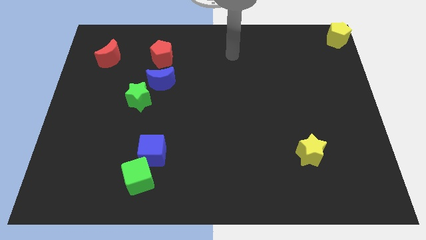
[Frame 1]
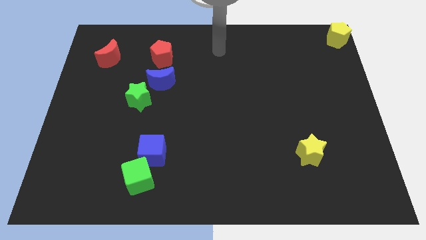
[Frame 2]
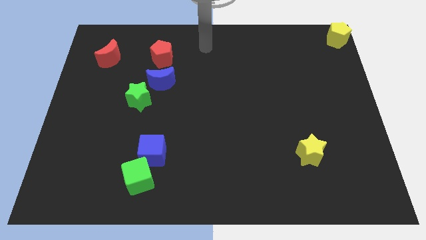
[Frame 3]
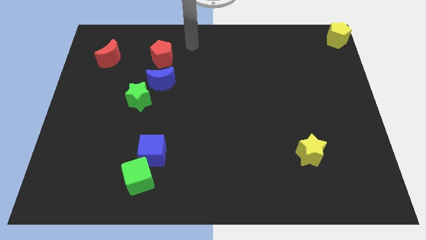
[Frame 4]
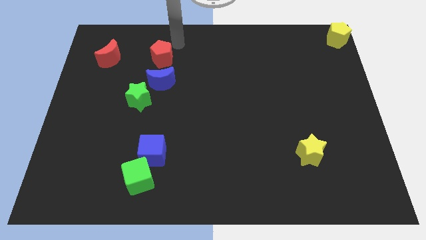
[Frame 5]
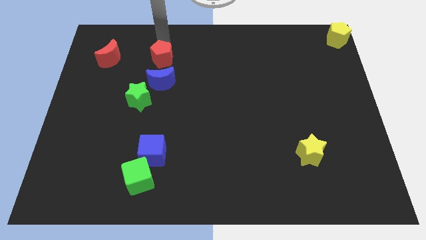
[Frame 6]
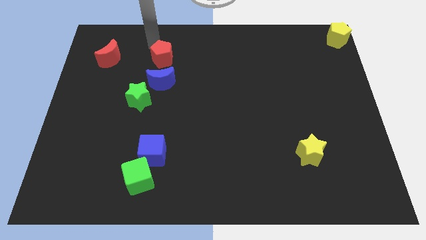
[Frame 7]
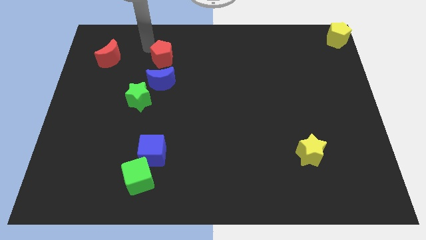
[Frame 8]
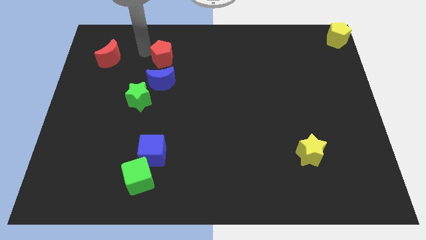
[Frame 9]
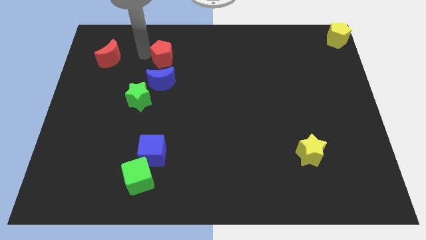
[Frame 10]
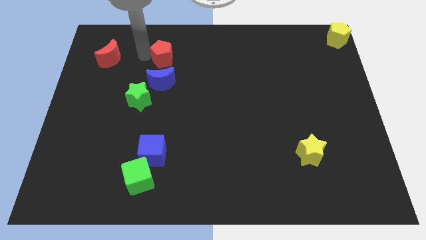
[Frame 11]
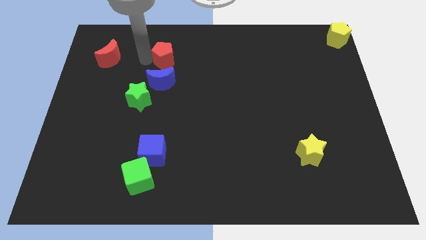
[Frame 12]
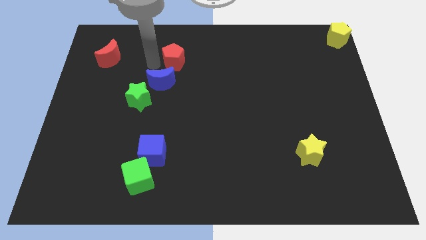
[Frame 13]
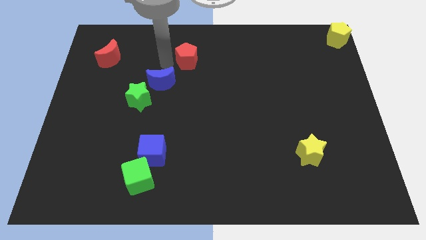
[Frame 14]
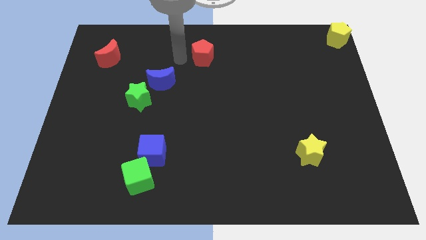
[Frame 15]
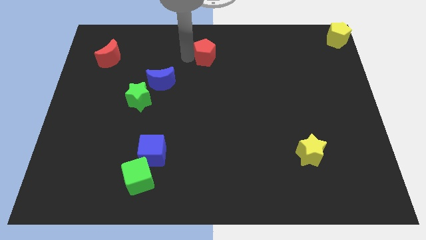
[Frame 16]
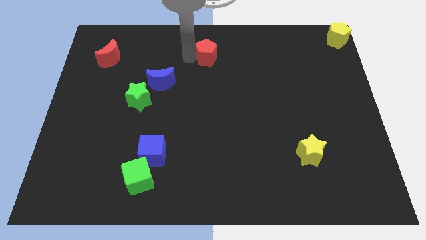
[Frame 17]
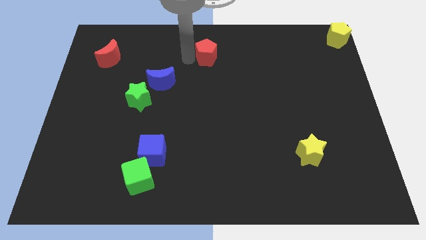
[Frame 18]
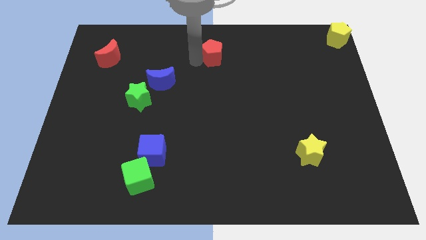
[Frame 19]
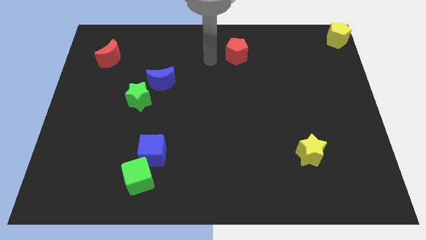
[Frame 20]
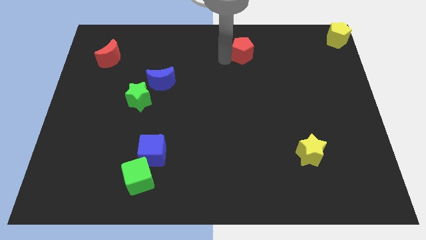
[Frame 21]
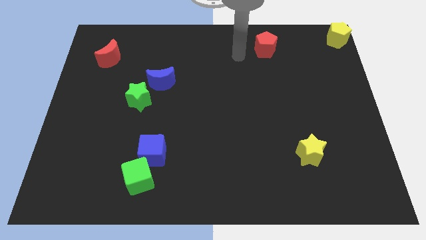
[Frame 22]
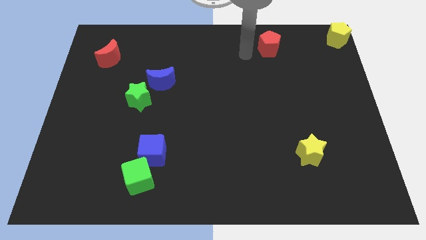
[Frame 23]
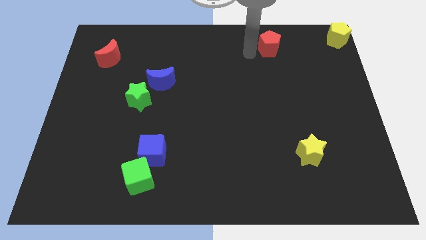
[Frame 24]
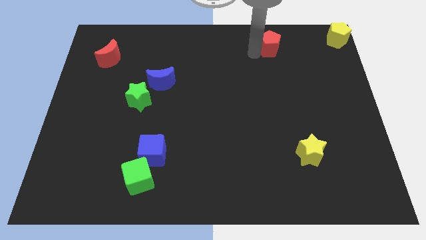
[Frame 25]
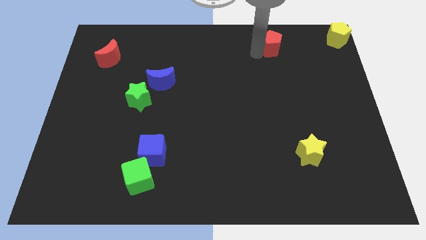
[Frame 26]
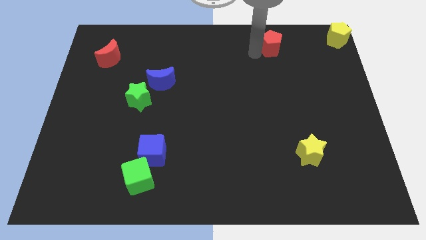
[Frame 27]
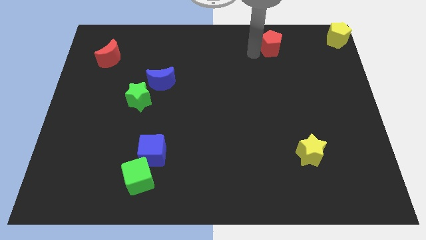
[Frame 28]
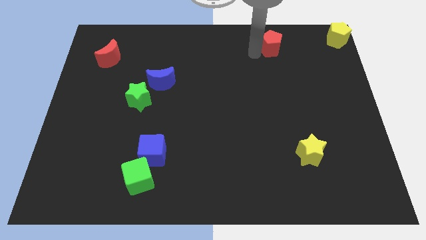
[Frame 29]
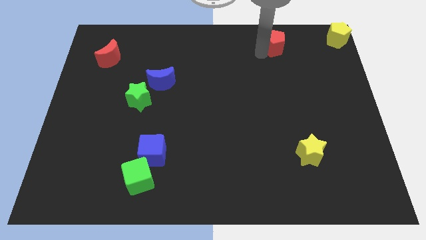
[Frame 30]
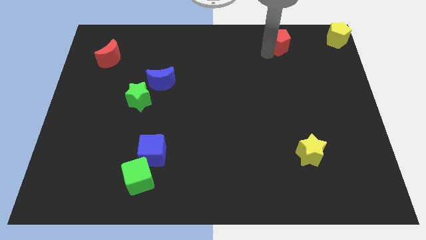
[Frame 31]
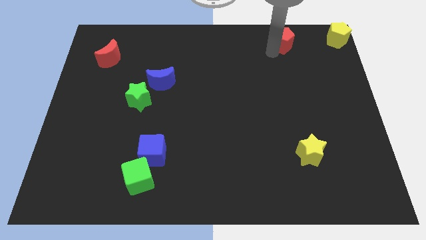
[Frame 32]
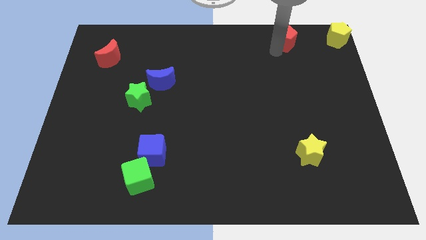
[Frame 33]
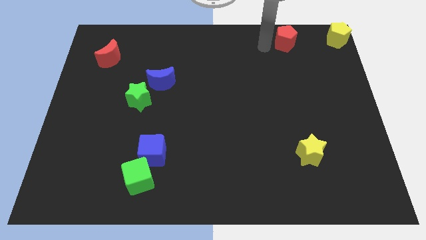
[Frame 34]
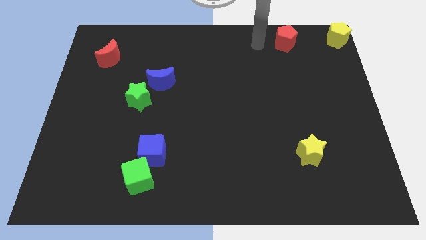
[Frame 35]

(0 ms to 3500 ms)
move the red pentagon away from the top of the blue moon

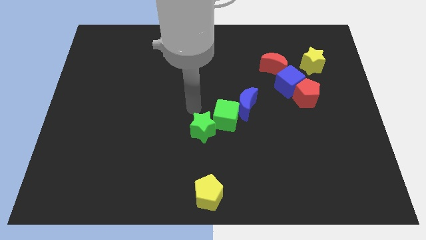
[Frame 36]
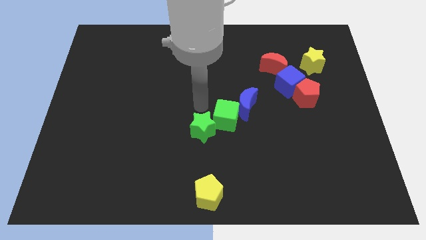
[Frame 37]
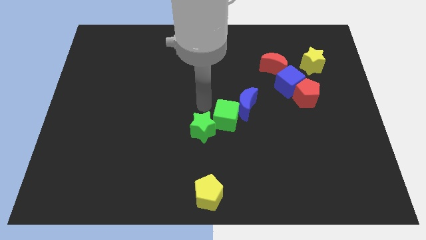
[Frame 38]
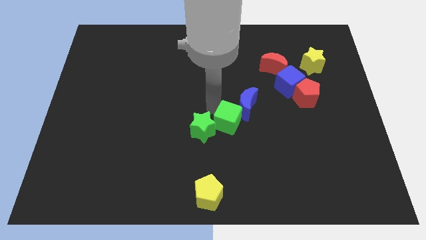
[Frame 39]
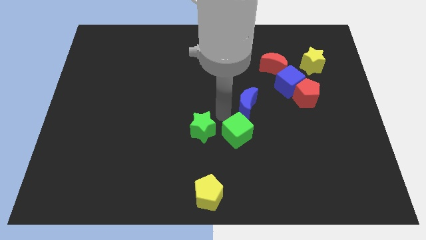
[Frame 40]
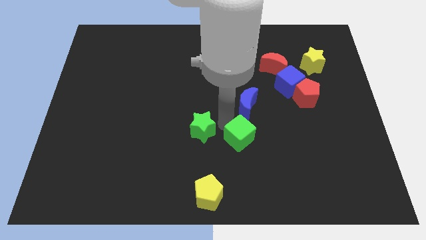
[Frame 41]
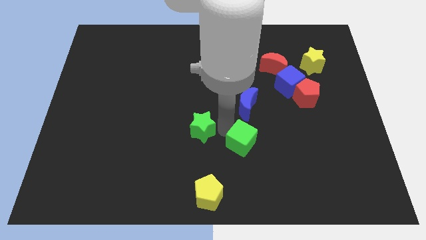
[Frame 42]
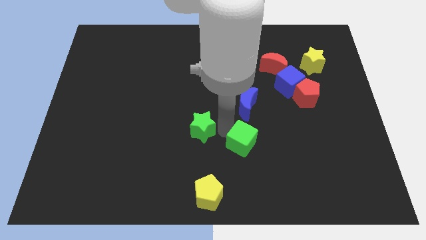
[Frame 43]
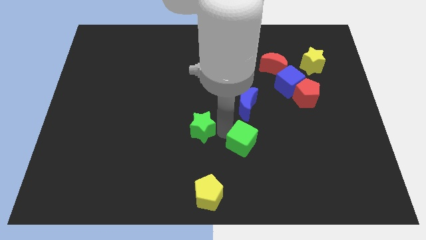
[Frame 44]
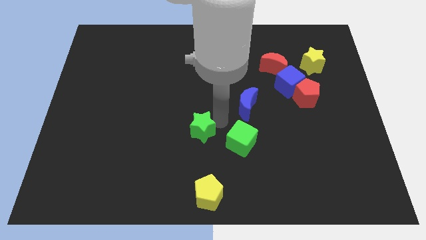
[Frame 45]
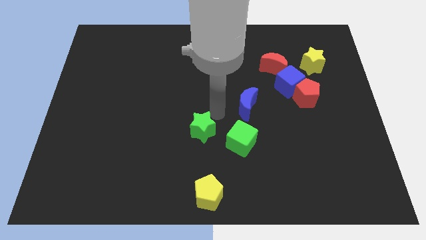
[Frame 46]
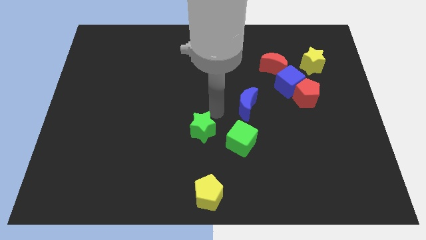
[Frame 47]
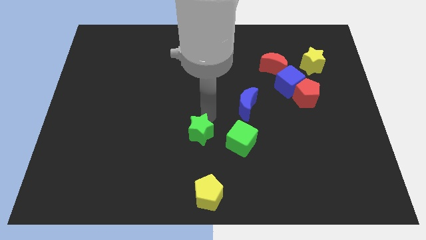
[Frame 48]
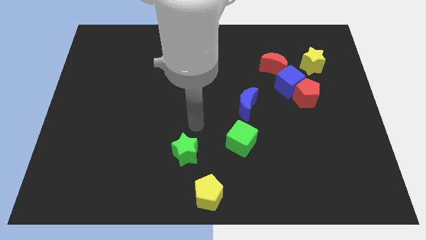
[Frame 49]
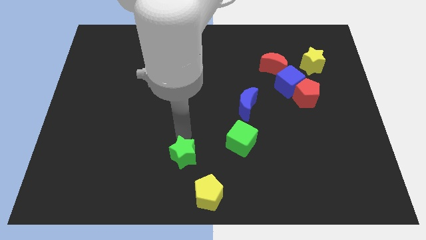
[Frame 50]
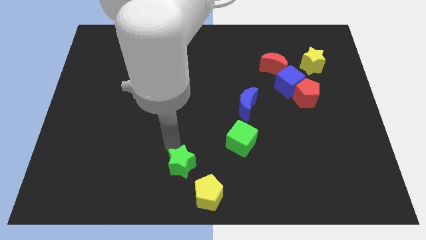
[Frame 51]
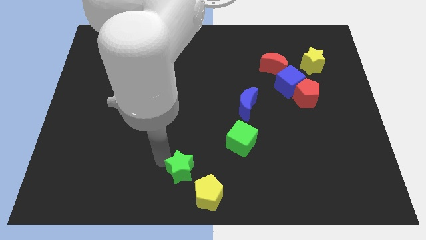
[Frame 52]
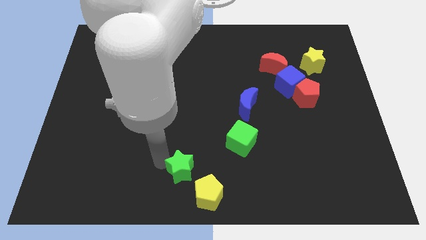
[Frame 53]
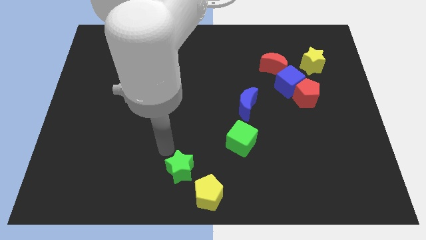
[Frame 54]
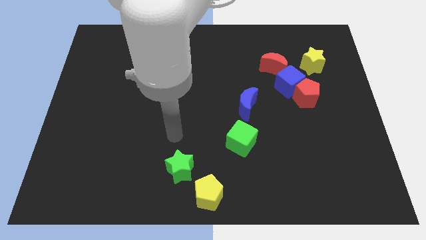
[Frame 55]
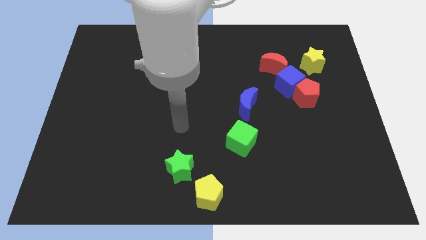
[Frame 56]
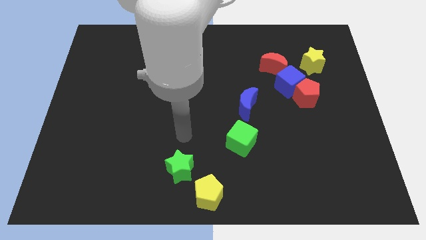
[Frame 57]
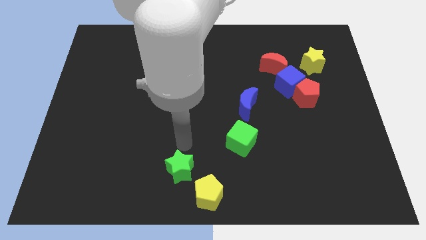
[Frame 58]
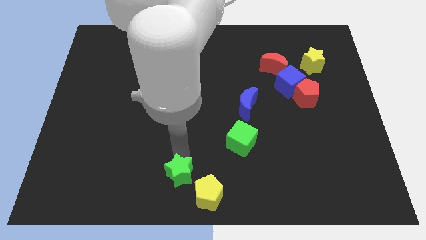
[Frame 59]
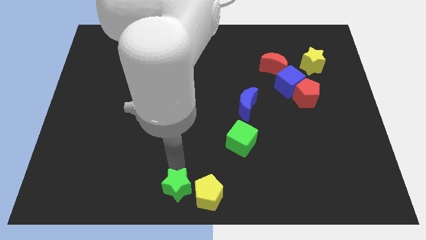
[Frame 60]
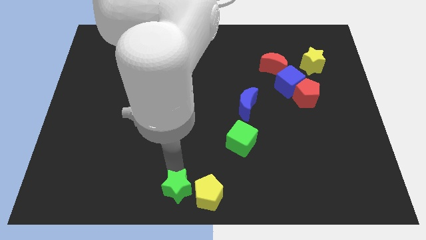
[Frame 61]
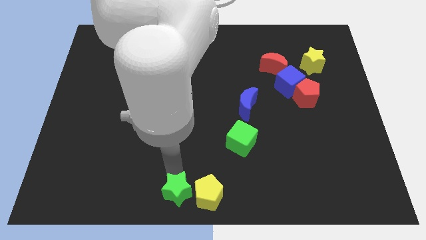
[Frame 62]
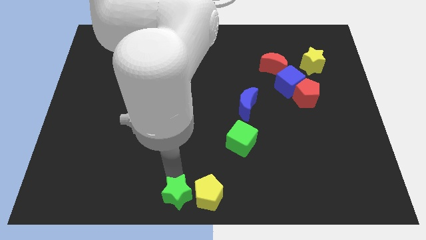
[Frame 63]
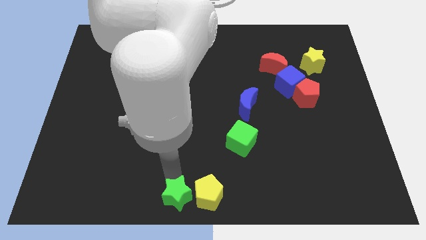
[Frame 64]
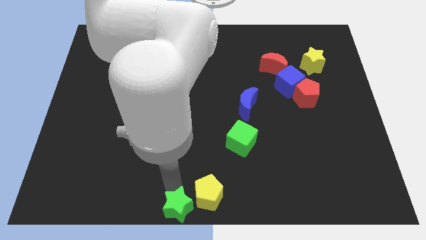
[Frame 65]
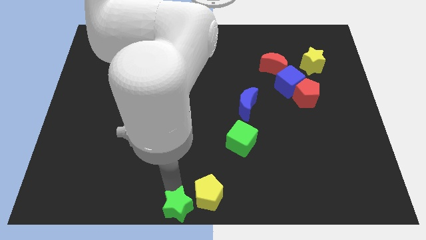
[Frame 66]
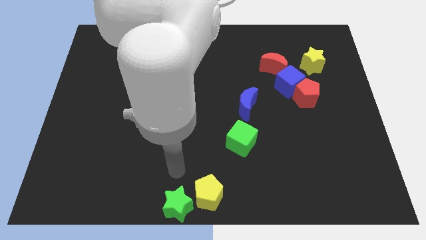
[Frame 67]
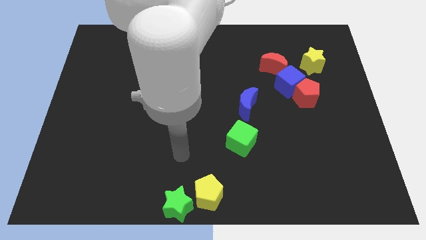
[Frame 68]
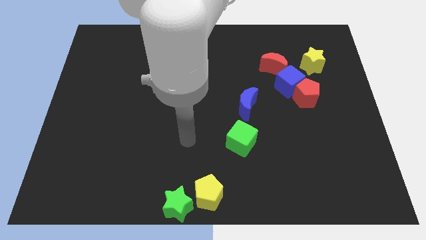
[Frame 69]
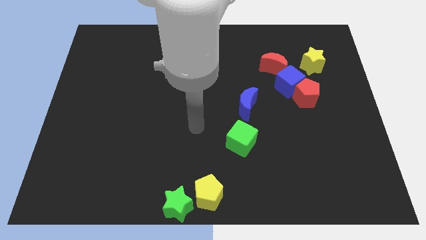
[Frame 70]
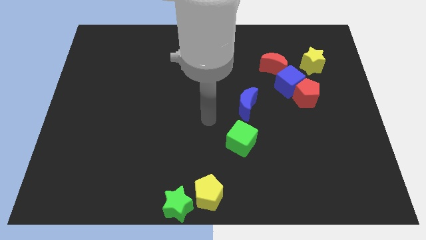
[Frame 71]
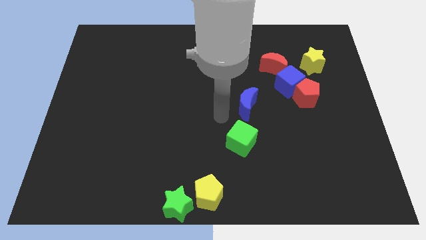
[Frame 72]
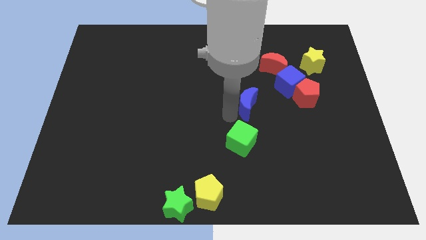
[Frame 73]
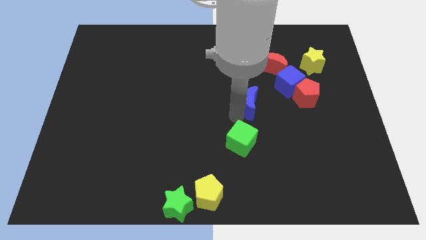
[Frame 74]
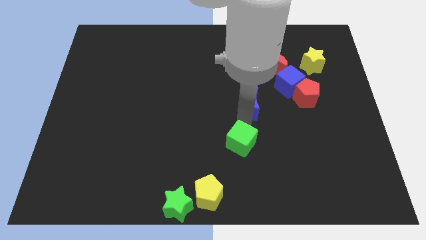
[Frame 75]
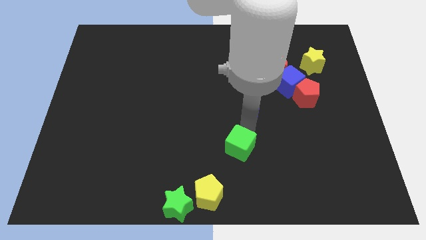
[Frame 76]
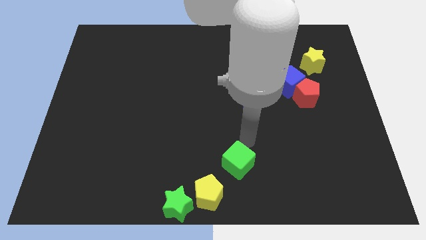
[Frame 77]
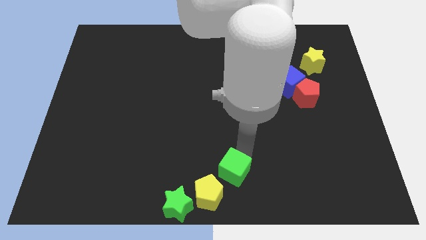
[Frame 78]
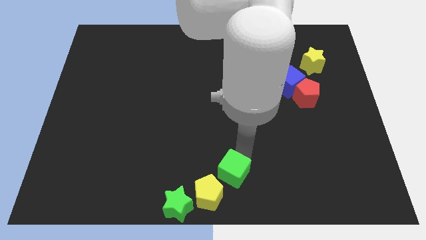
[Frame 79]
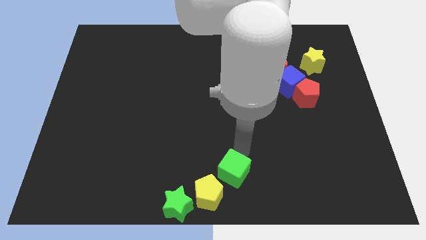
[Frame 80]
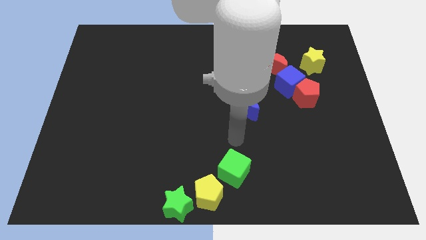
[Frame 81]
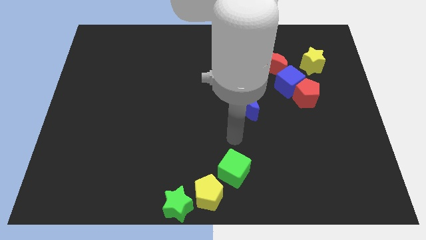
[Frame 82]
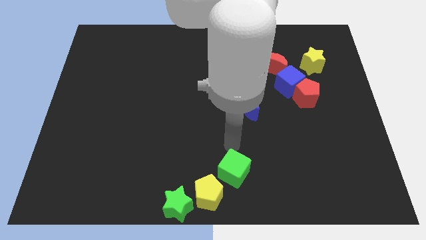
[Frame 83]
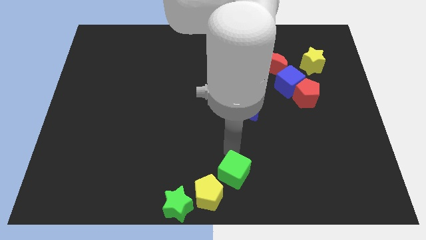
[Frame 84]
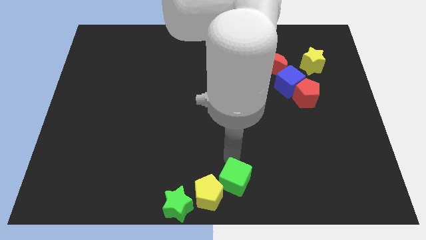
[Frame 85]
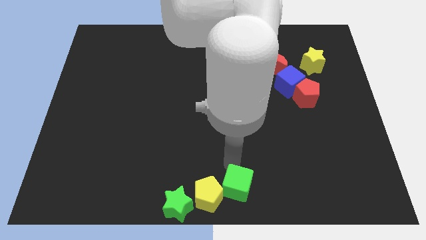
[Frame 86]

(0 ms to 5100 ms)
move the green cube green star into the yellow pentagon

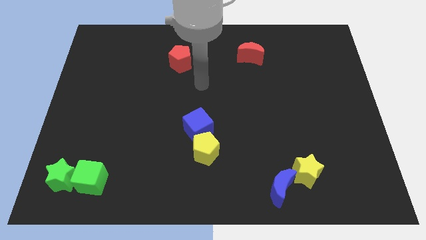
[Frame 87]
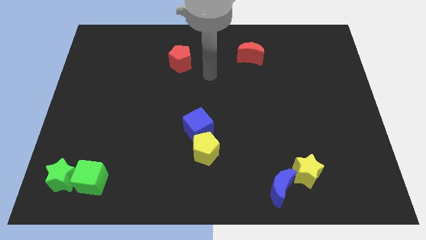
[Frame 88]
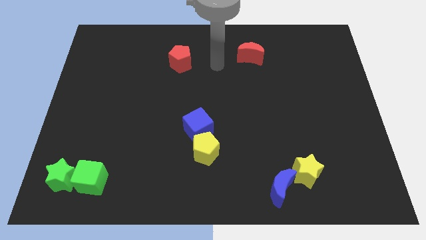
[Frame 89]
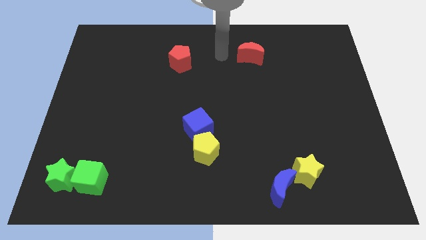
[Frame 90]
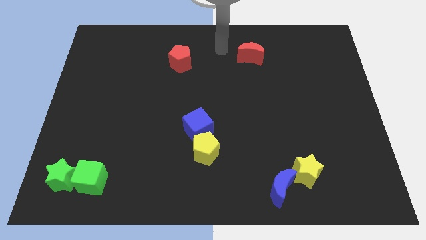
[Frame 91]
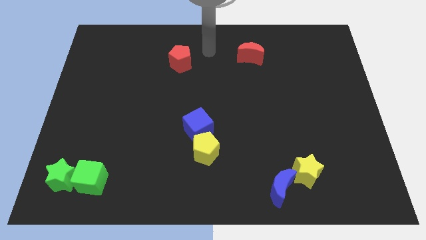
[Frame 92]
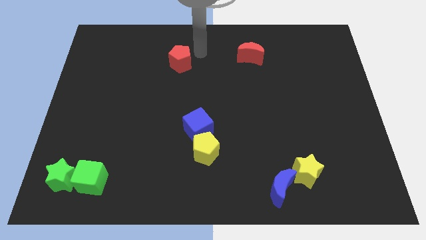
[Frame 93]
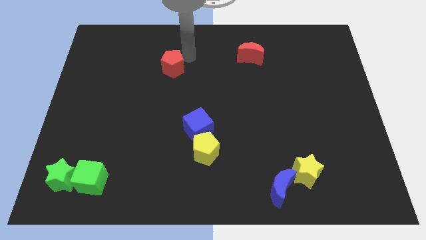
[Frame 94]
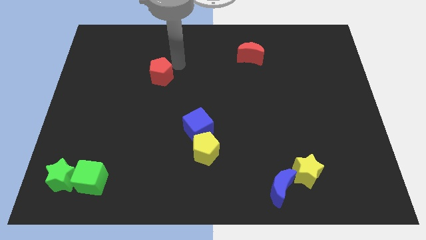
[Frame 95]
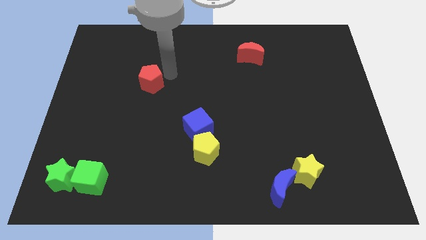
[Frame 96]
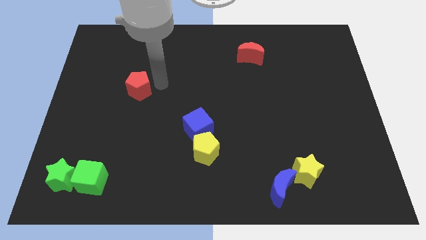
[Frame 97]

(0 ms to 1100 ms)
push the red pentagon to the bottom side
